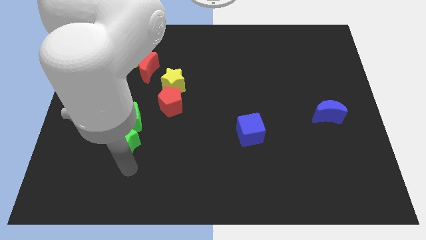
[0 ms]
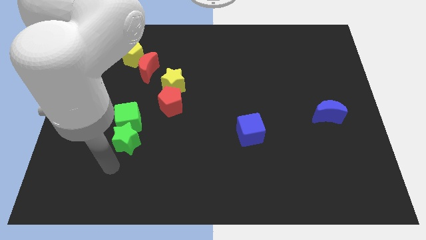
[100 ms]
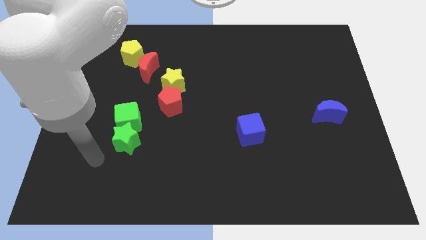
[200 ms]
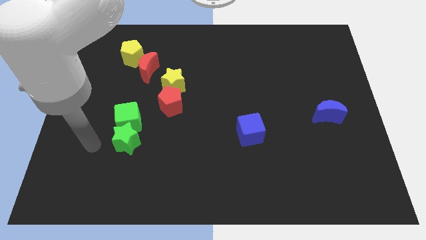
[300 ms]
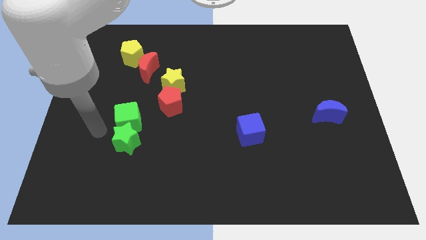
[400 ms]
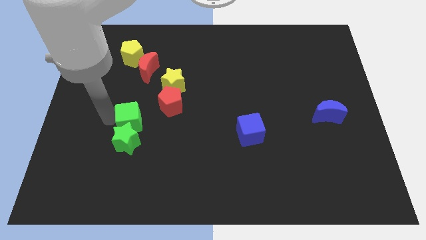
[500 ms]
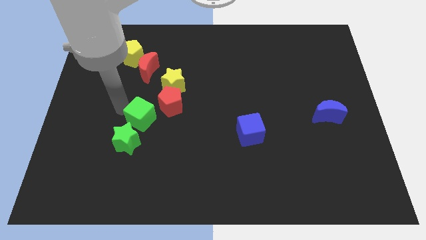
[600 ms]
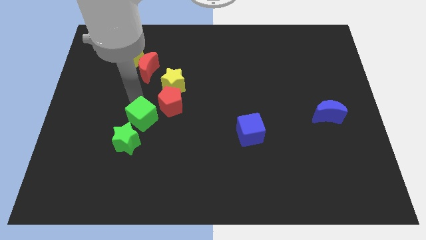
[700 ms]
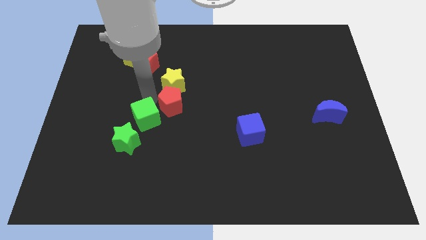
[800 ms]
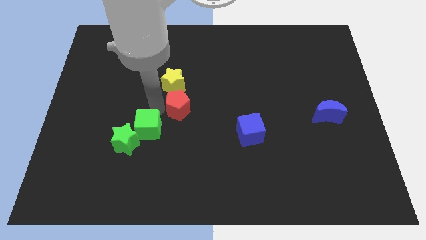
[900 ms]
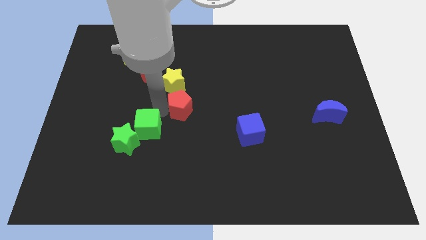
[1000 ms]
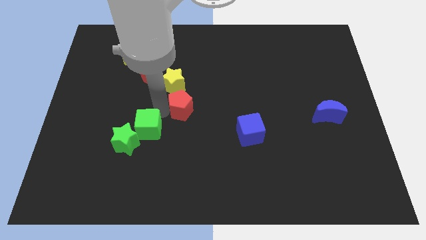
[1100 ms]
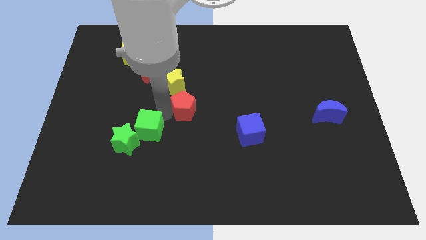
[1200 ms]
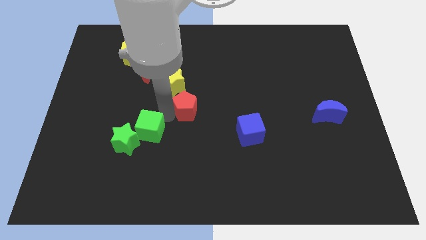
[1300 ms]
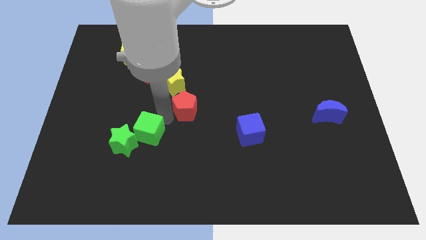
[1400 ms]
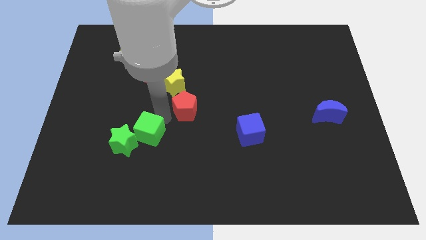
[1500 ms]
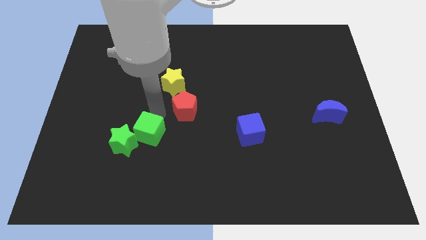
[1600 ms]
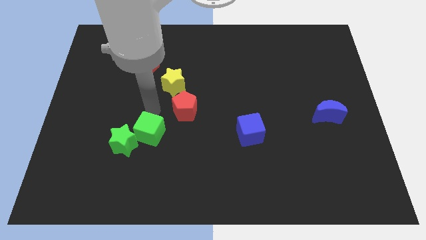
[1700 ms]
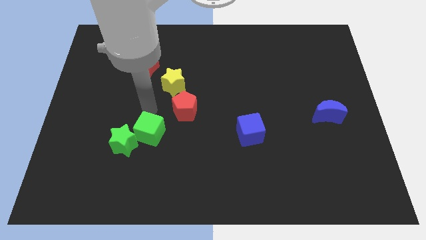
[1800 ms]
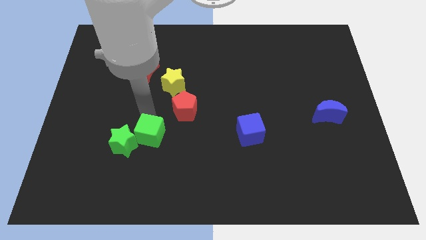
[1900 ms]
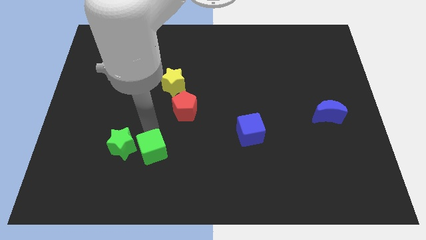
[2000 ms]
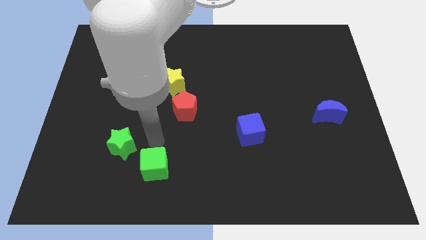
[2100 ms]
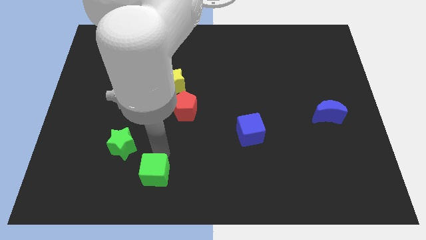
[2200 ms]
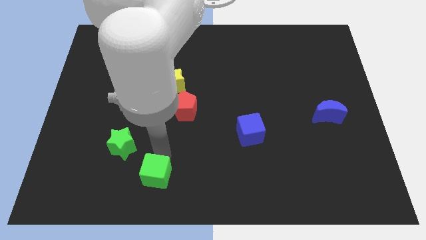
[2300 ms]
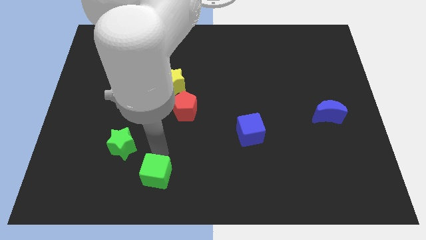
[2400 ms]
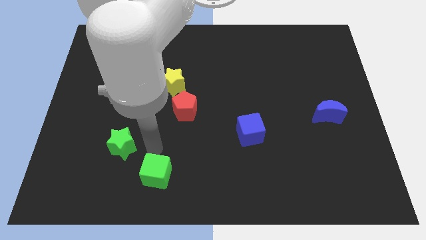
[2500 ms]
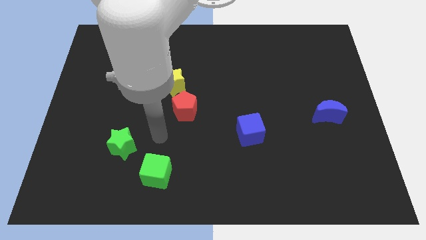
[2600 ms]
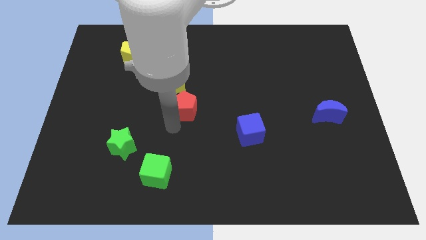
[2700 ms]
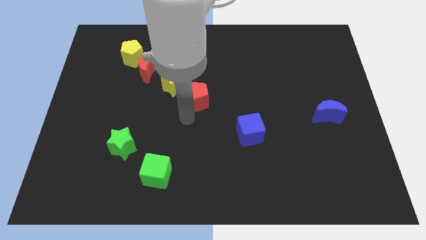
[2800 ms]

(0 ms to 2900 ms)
place your arm down to the red pentagon

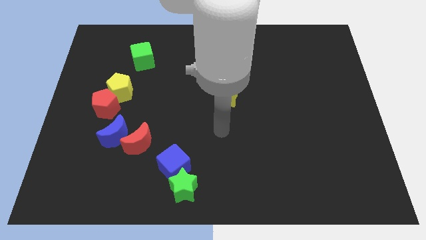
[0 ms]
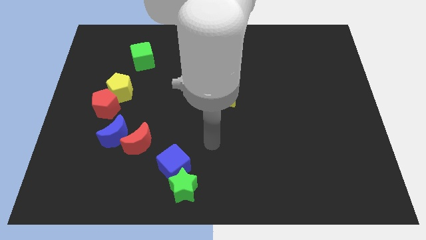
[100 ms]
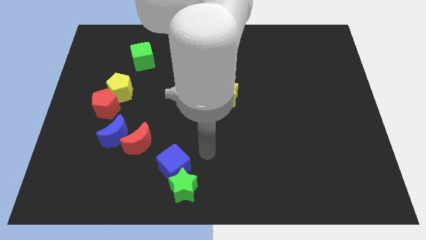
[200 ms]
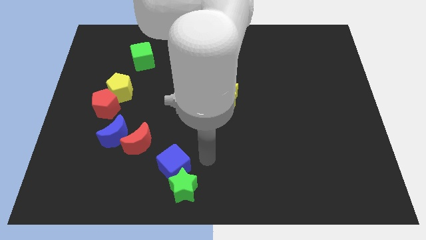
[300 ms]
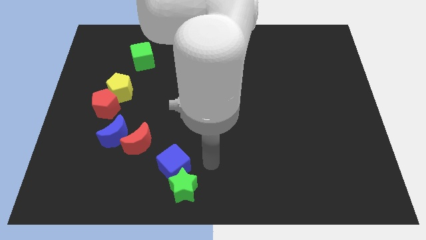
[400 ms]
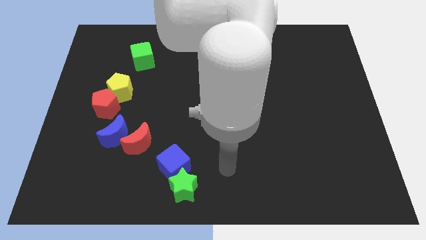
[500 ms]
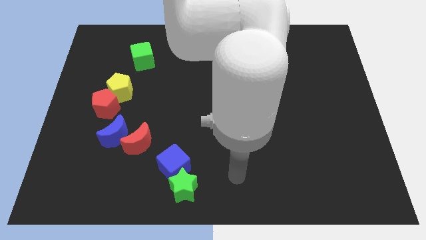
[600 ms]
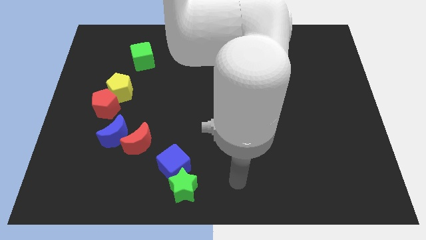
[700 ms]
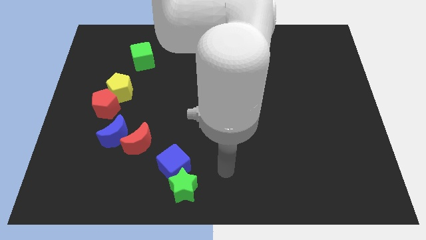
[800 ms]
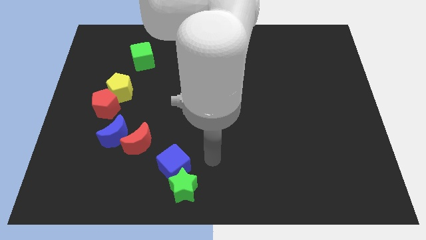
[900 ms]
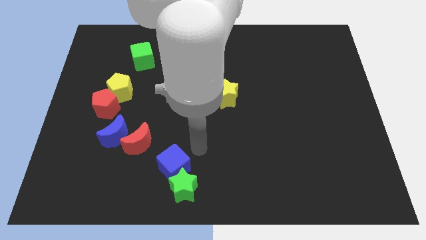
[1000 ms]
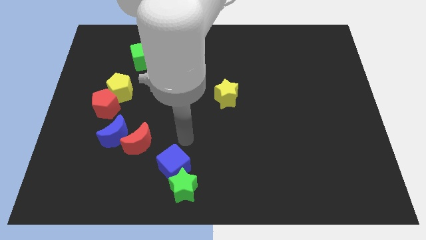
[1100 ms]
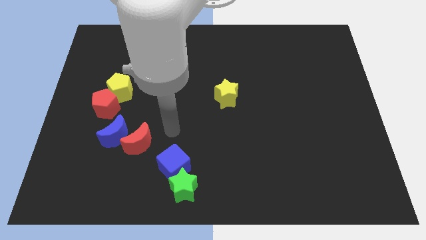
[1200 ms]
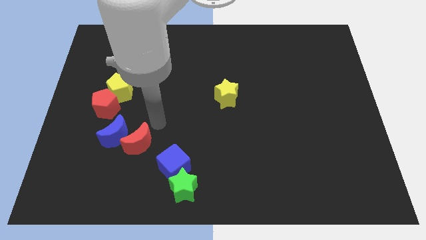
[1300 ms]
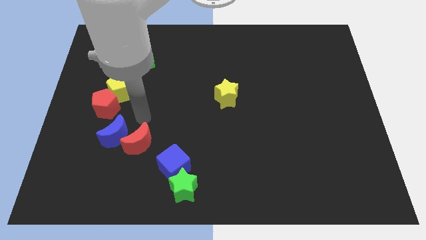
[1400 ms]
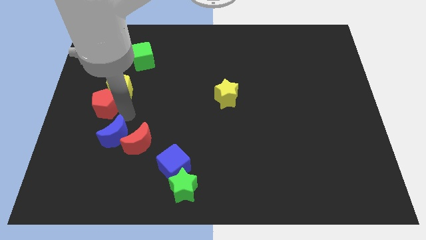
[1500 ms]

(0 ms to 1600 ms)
point your arm towards red pentagon

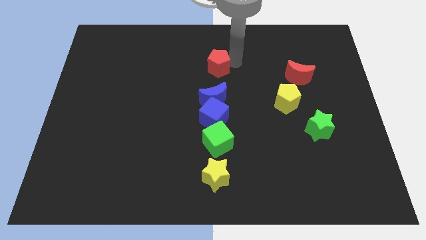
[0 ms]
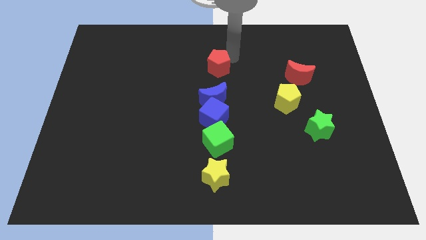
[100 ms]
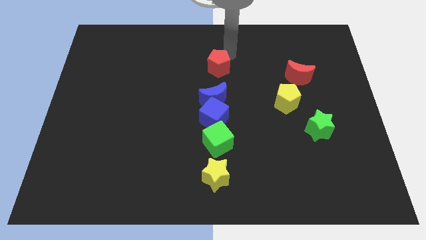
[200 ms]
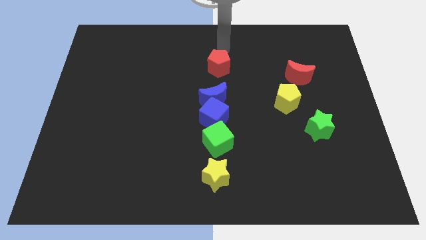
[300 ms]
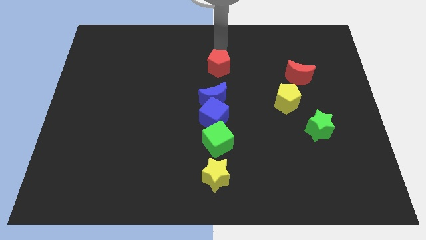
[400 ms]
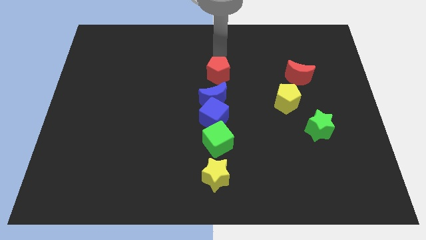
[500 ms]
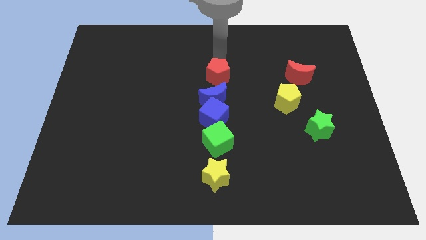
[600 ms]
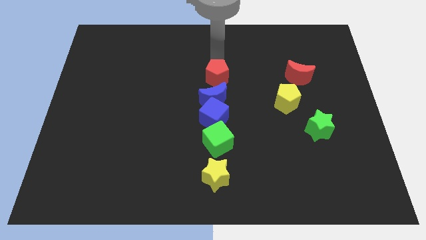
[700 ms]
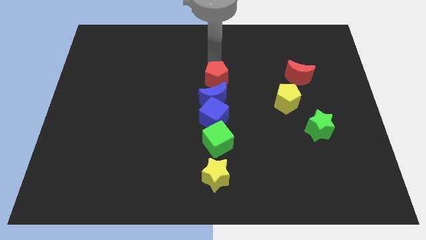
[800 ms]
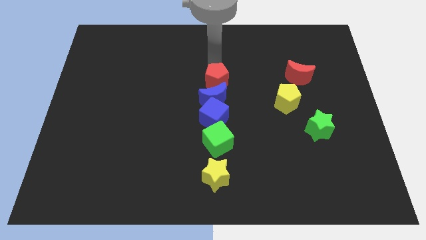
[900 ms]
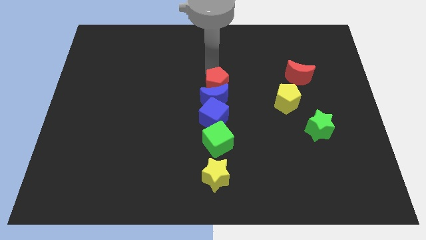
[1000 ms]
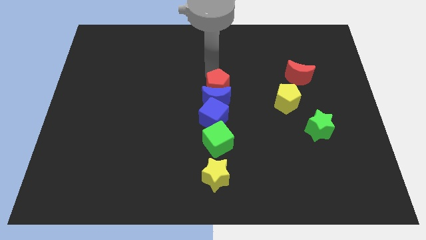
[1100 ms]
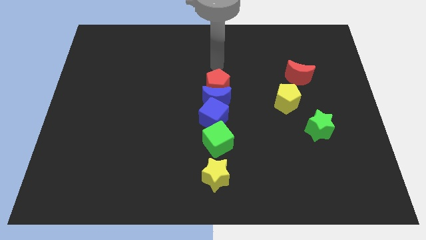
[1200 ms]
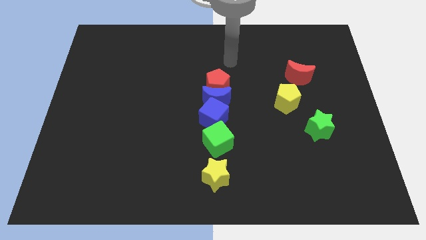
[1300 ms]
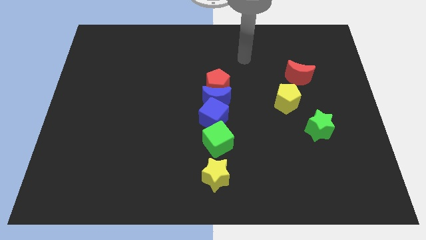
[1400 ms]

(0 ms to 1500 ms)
push the red pentagan on top of the blue crescent

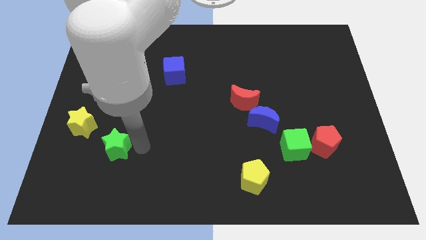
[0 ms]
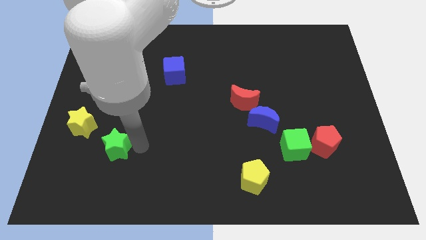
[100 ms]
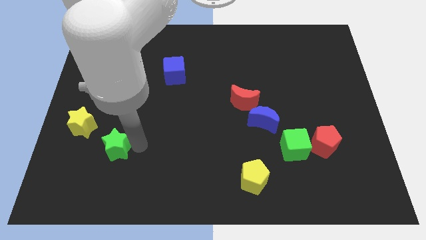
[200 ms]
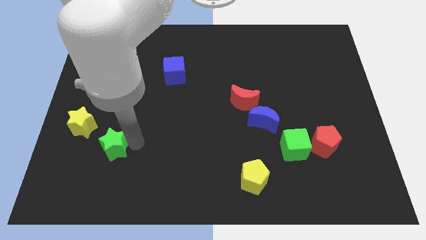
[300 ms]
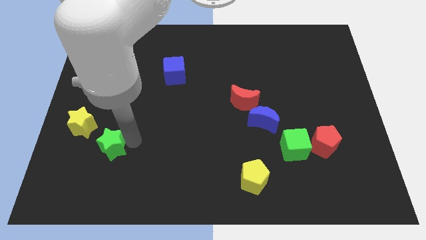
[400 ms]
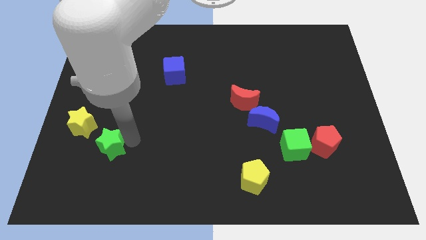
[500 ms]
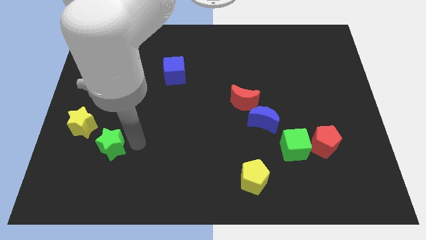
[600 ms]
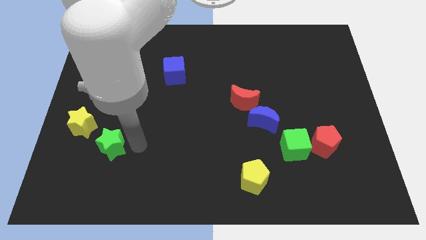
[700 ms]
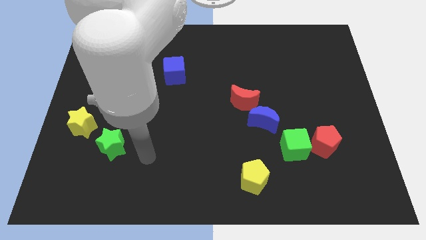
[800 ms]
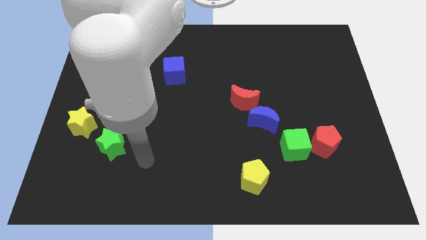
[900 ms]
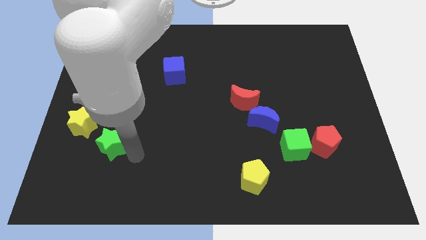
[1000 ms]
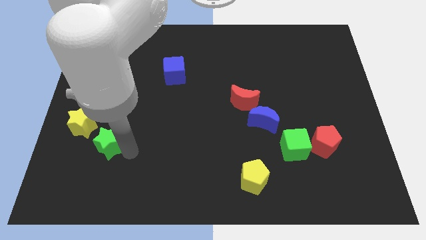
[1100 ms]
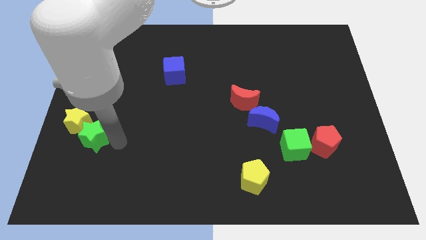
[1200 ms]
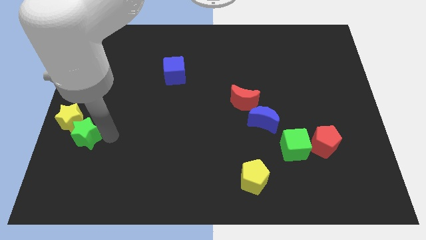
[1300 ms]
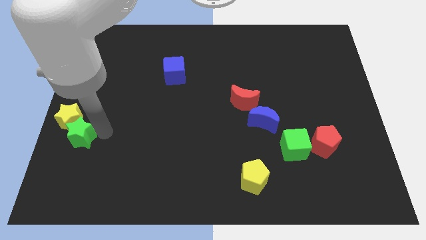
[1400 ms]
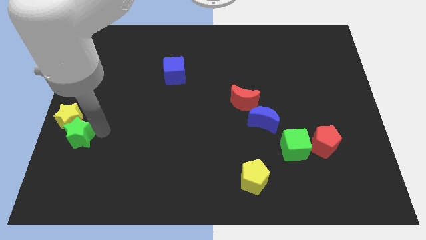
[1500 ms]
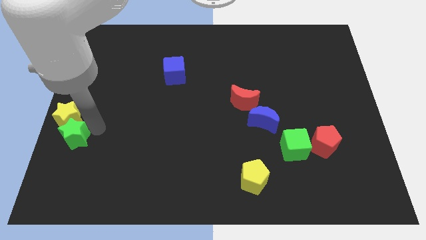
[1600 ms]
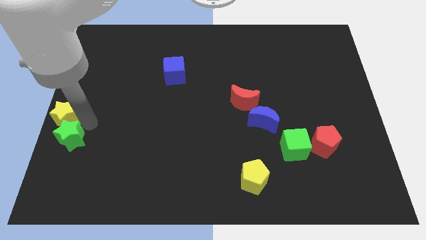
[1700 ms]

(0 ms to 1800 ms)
move the green star into the yellow star

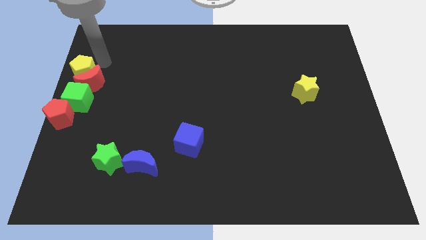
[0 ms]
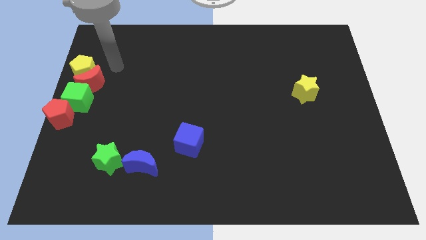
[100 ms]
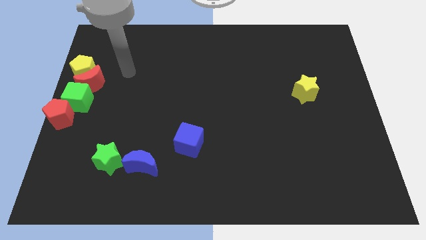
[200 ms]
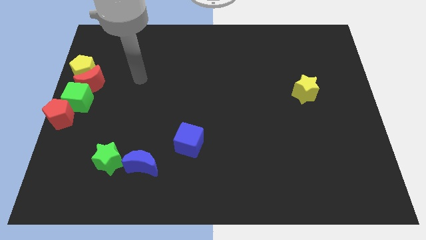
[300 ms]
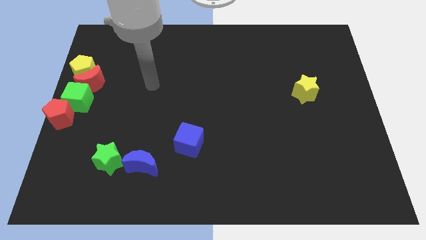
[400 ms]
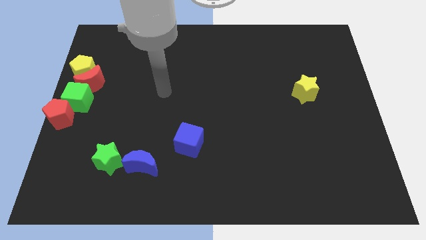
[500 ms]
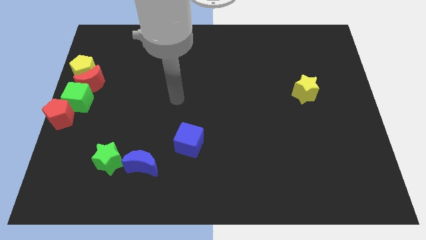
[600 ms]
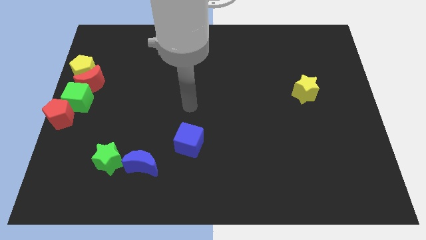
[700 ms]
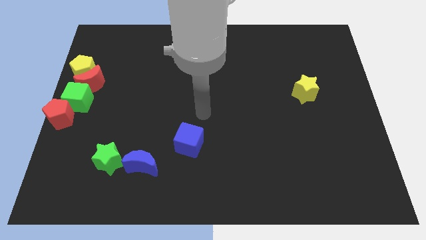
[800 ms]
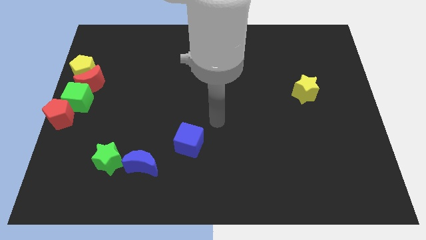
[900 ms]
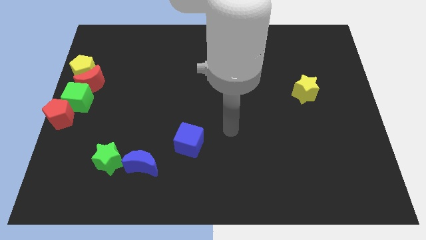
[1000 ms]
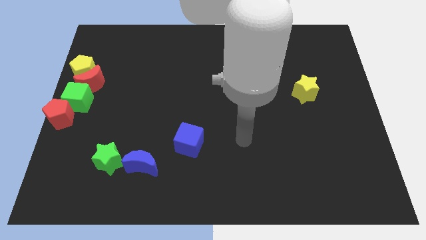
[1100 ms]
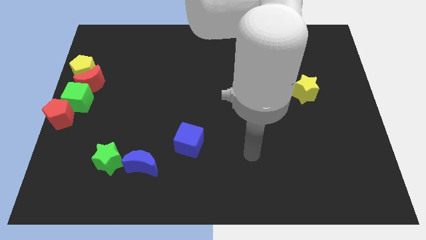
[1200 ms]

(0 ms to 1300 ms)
place your hand at right side of the blue cube
